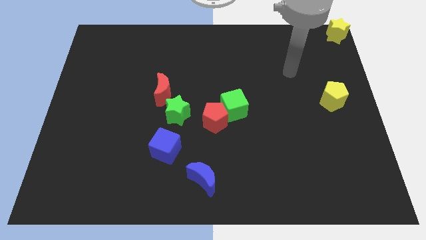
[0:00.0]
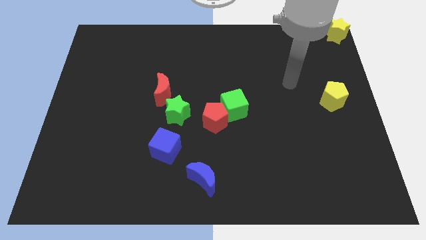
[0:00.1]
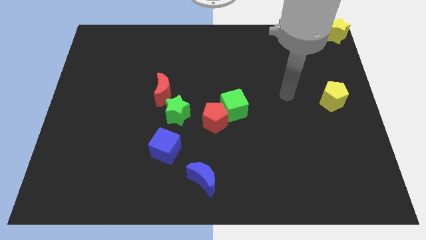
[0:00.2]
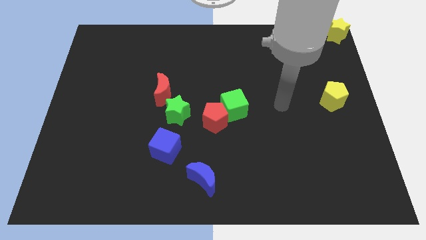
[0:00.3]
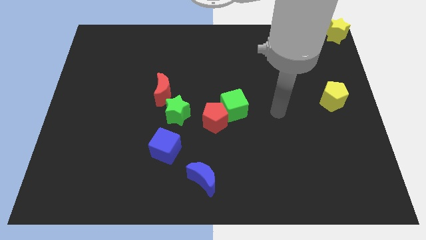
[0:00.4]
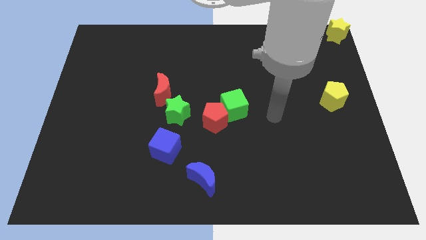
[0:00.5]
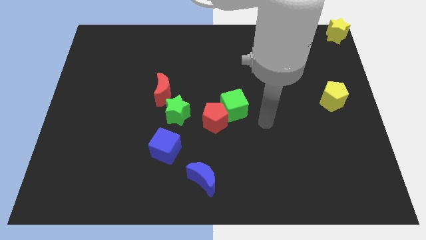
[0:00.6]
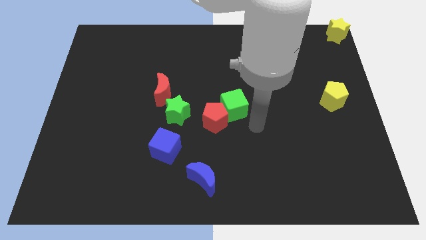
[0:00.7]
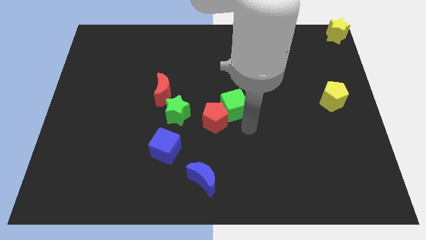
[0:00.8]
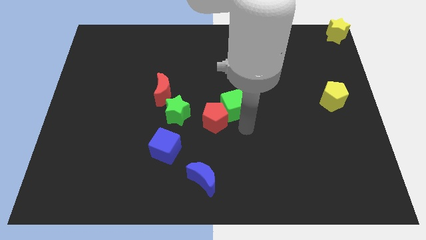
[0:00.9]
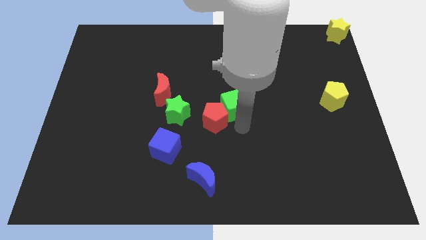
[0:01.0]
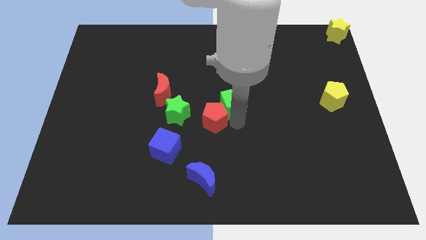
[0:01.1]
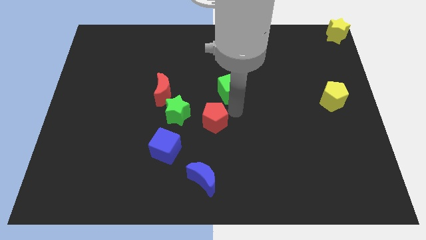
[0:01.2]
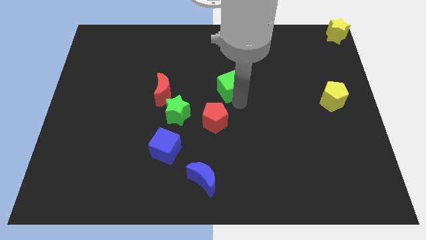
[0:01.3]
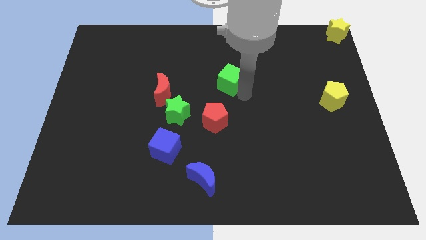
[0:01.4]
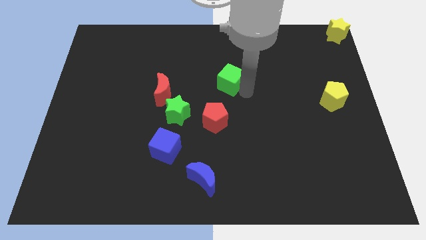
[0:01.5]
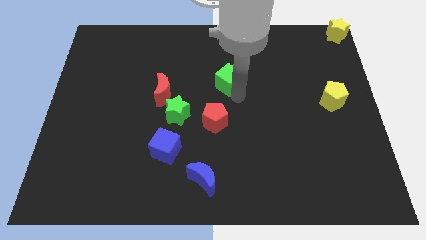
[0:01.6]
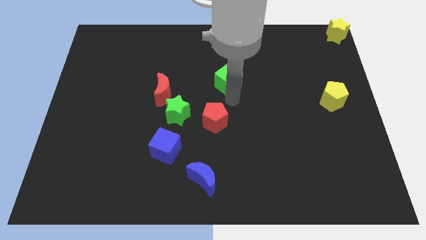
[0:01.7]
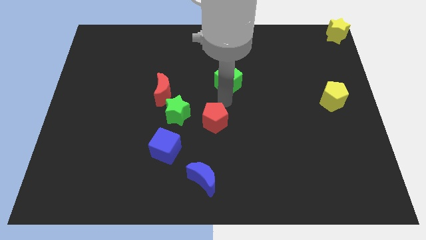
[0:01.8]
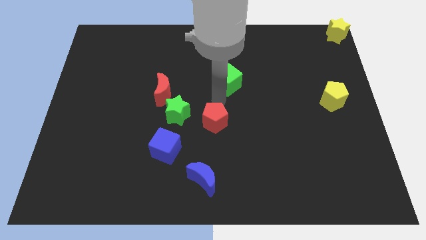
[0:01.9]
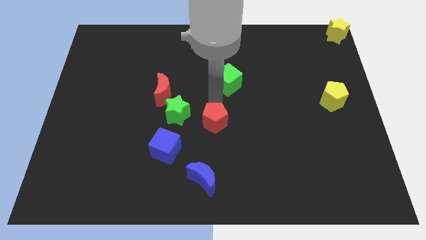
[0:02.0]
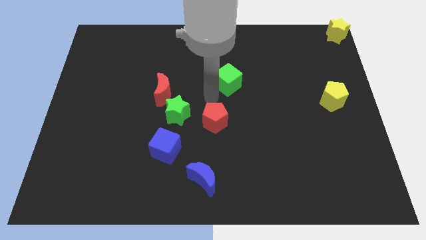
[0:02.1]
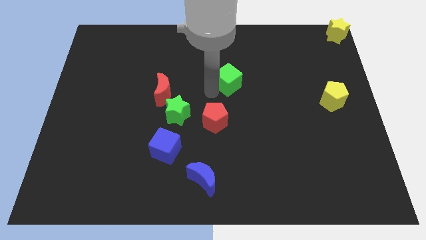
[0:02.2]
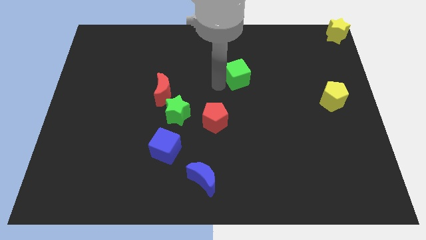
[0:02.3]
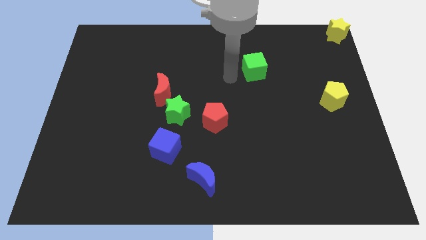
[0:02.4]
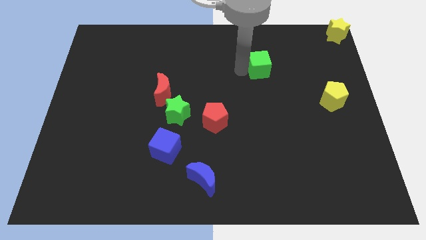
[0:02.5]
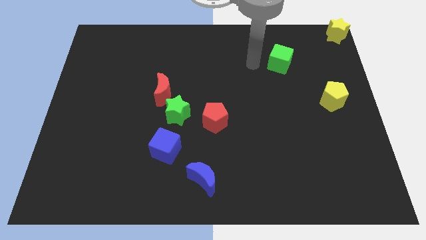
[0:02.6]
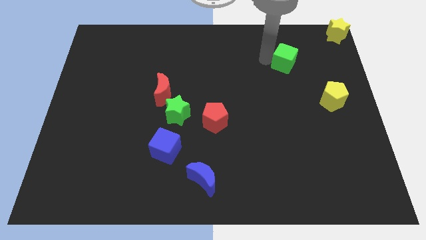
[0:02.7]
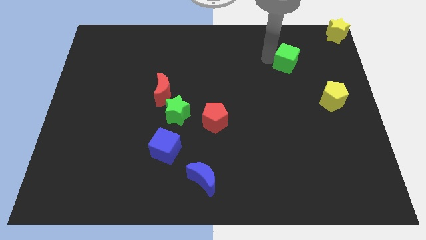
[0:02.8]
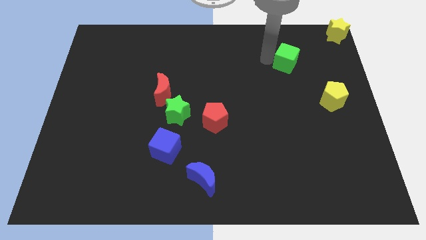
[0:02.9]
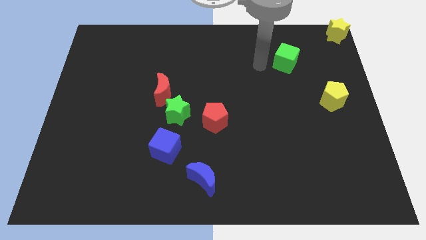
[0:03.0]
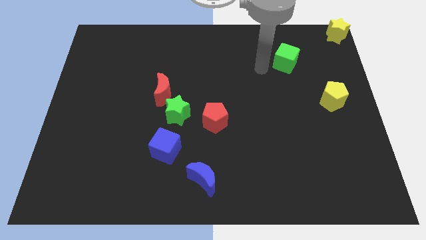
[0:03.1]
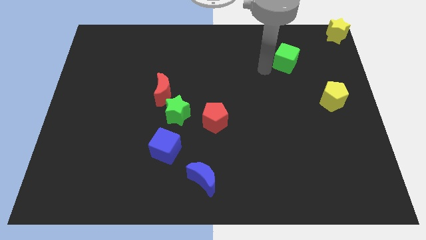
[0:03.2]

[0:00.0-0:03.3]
take the green cube towards the yellow star

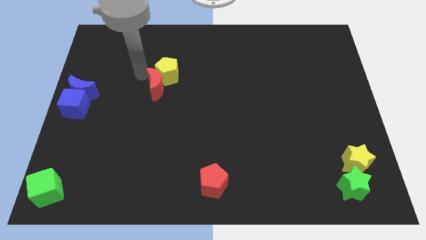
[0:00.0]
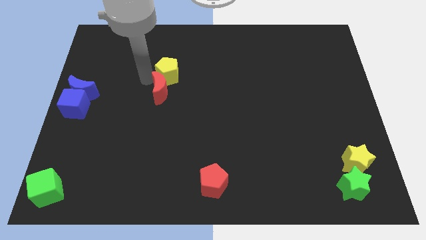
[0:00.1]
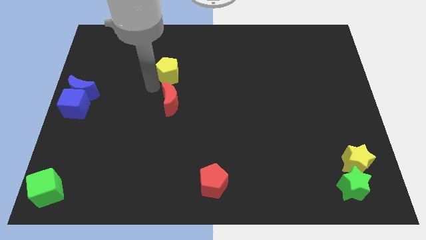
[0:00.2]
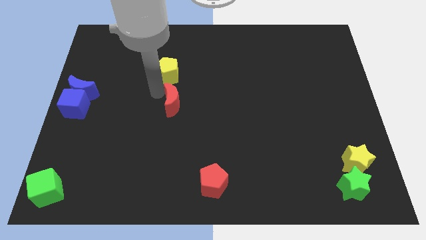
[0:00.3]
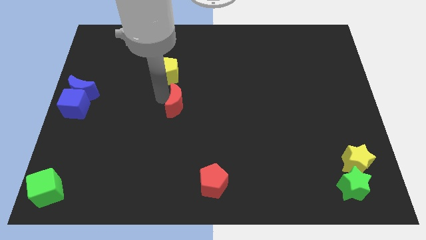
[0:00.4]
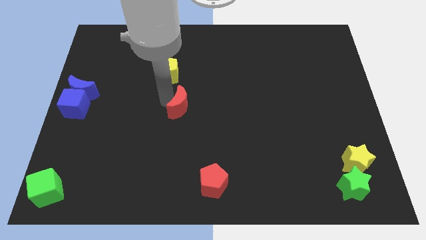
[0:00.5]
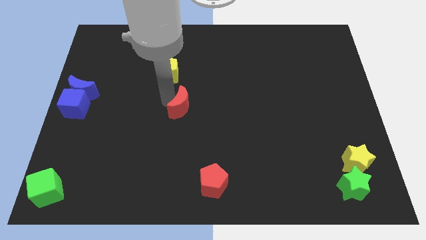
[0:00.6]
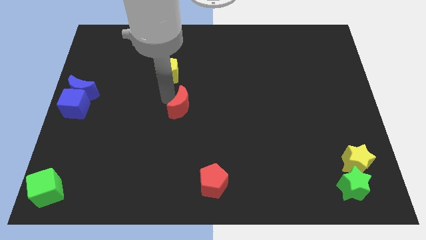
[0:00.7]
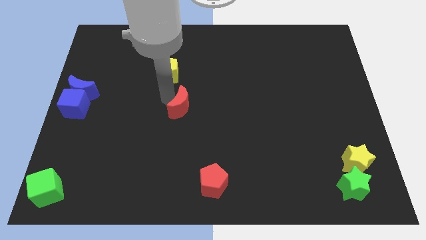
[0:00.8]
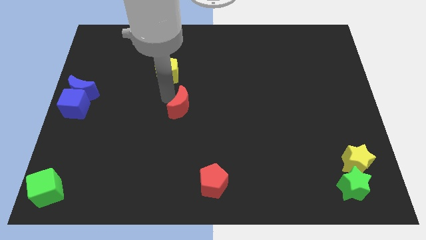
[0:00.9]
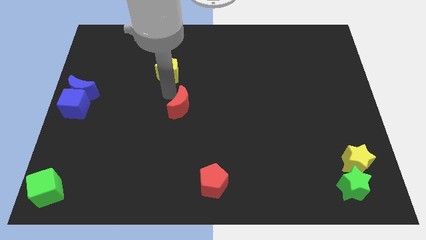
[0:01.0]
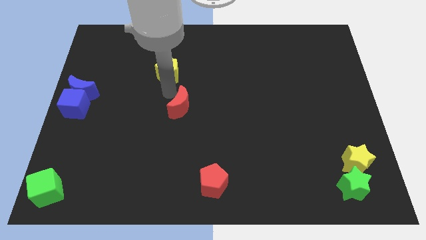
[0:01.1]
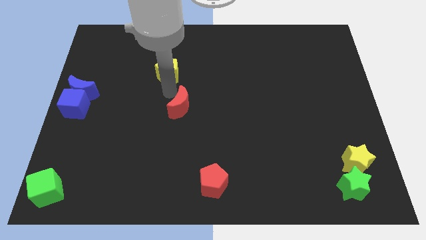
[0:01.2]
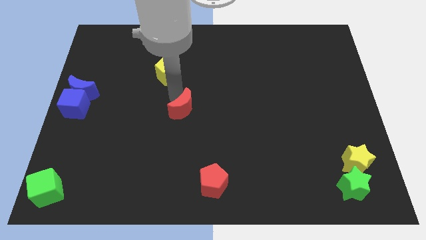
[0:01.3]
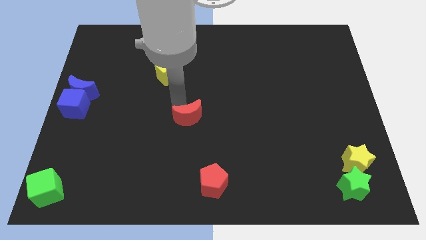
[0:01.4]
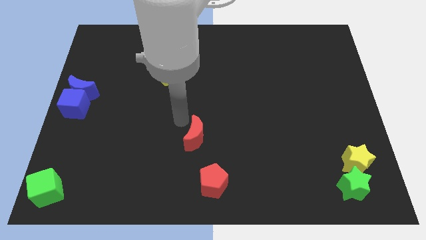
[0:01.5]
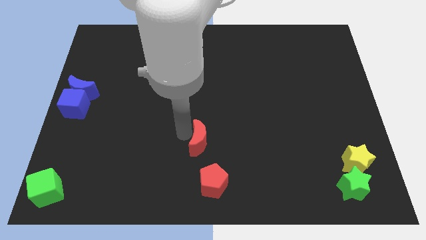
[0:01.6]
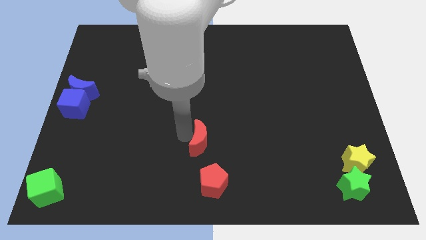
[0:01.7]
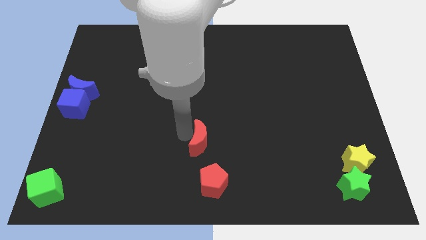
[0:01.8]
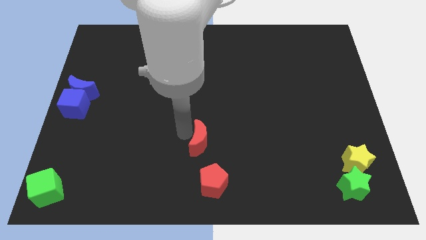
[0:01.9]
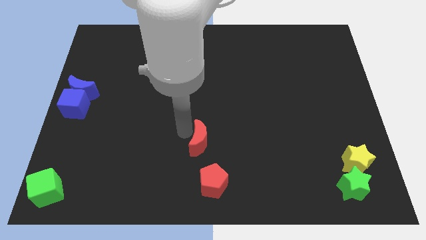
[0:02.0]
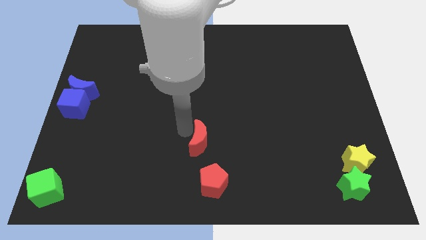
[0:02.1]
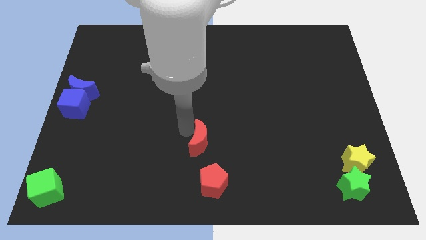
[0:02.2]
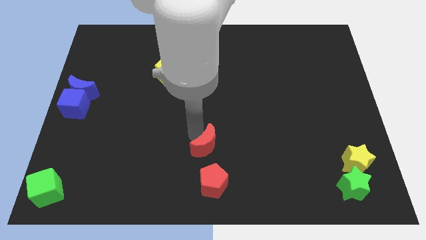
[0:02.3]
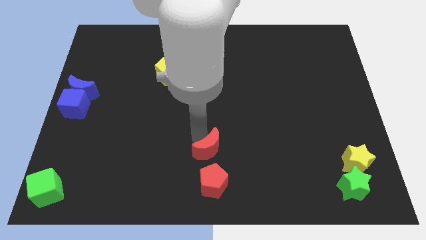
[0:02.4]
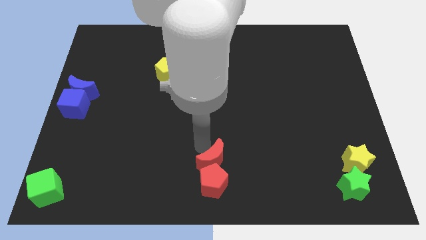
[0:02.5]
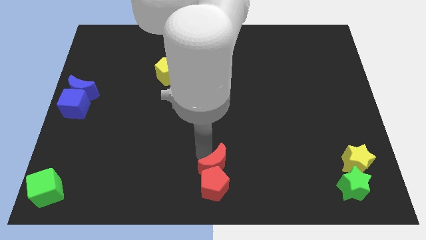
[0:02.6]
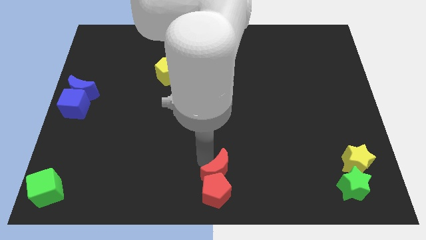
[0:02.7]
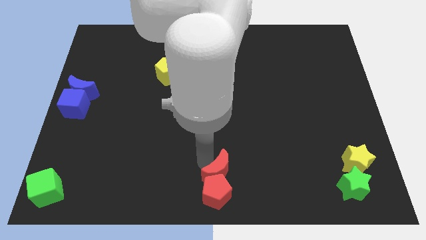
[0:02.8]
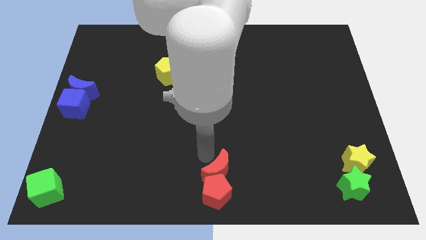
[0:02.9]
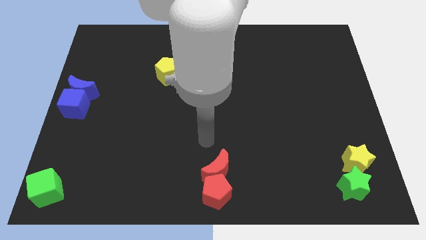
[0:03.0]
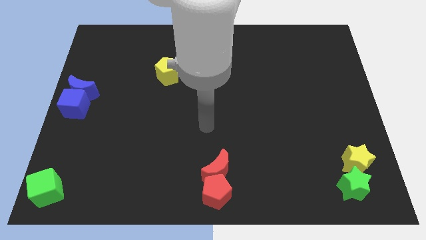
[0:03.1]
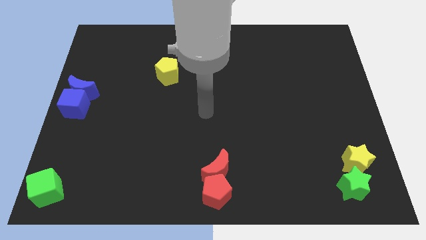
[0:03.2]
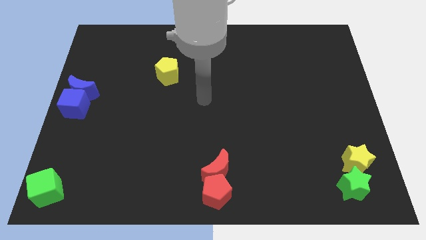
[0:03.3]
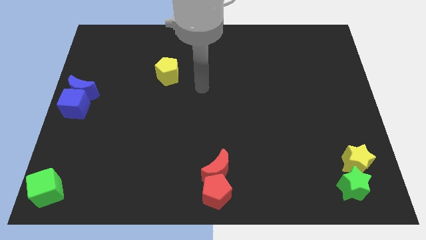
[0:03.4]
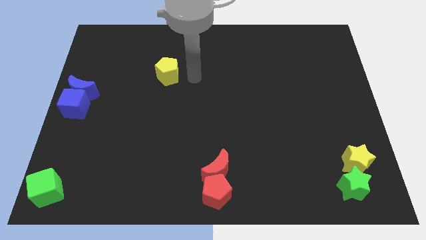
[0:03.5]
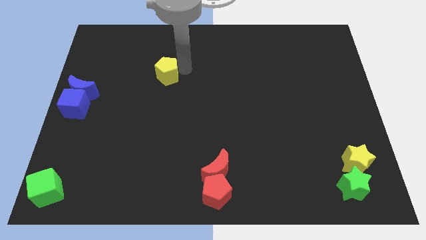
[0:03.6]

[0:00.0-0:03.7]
place the red crescent towards the top of the red pentagon

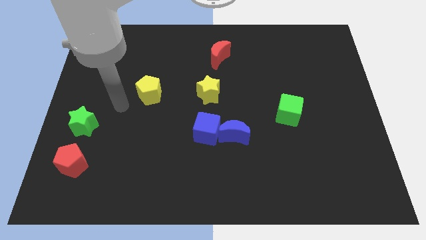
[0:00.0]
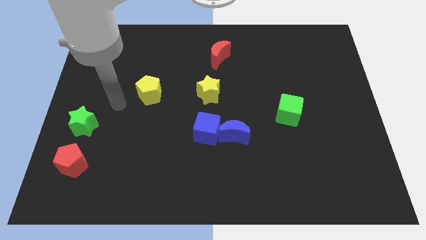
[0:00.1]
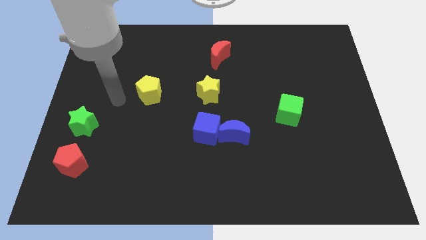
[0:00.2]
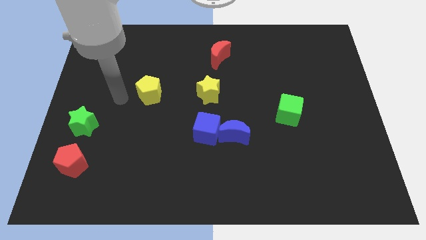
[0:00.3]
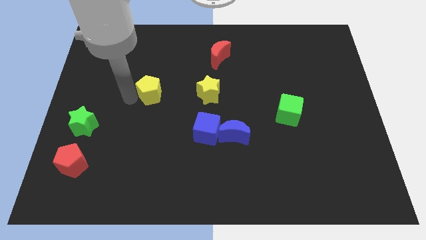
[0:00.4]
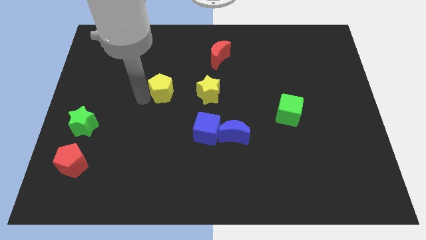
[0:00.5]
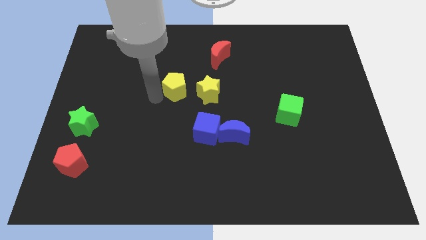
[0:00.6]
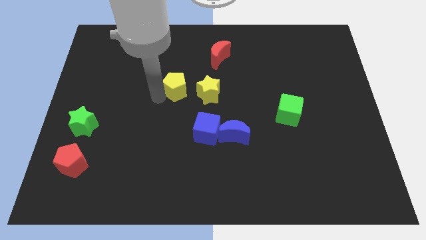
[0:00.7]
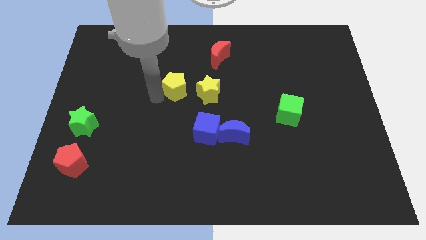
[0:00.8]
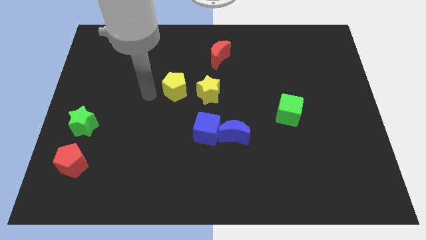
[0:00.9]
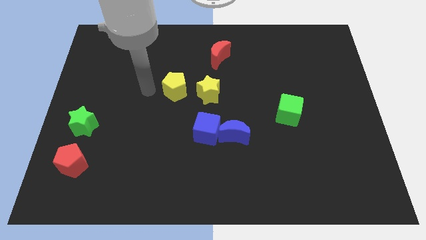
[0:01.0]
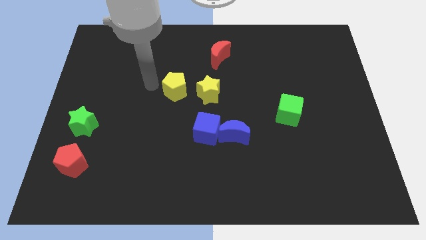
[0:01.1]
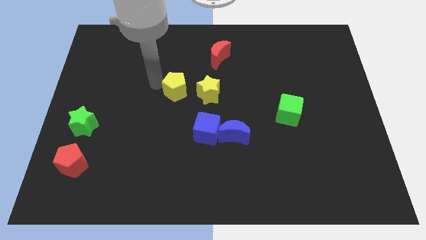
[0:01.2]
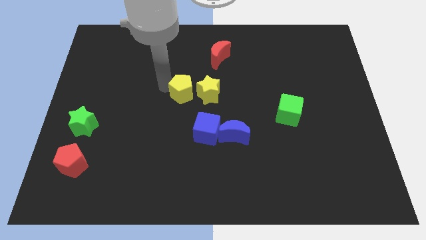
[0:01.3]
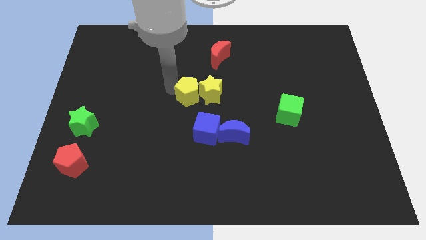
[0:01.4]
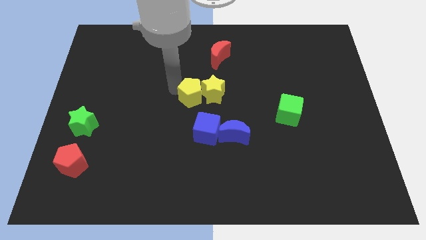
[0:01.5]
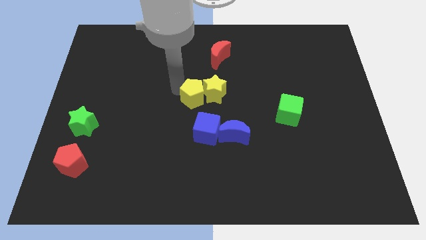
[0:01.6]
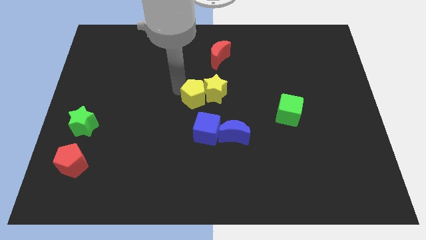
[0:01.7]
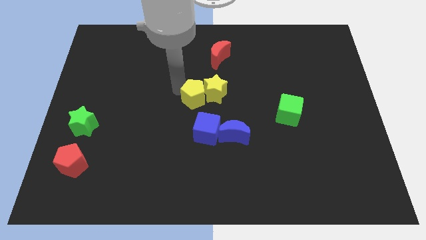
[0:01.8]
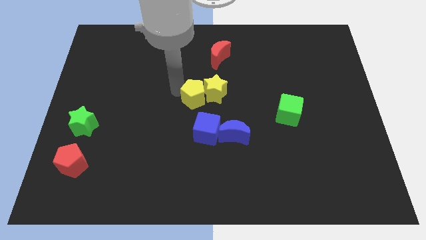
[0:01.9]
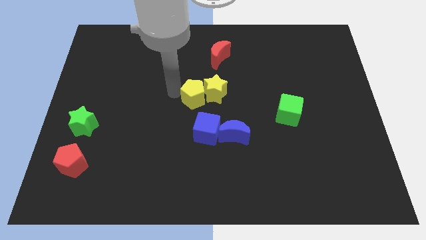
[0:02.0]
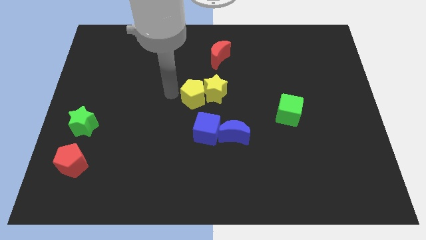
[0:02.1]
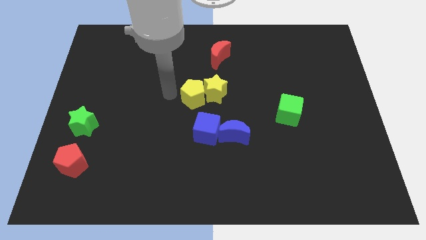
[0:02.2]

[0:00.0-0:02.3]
push the yellow pentagon into yellow star to the left
